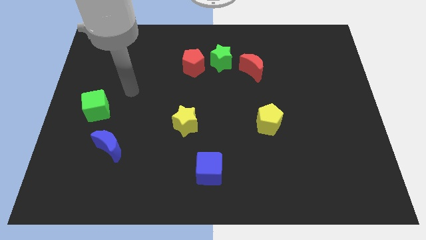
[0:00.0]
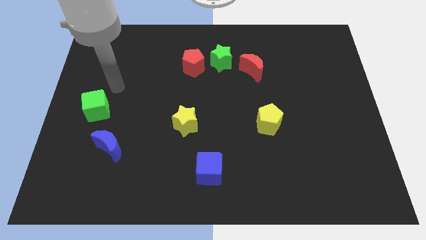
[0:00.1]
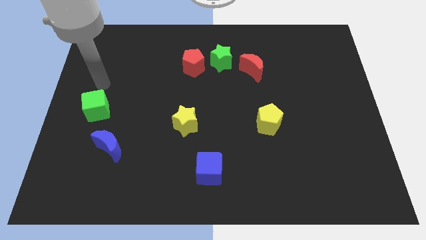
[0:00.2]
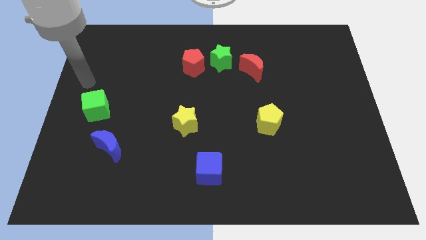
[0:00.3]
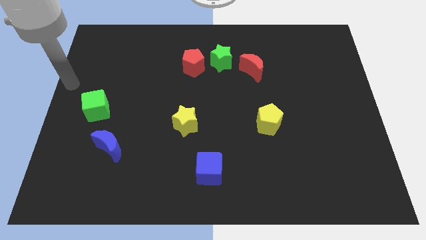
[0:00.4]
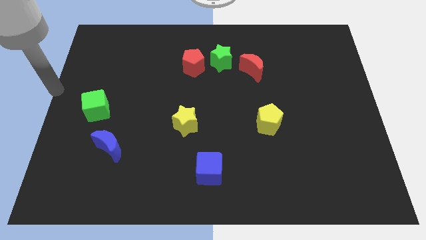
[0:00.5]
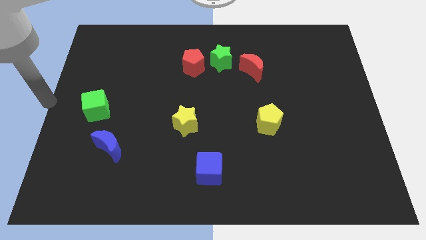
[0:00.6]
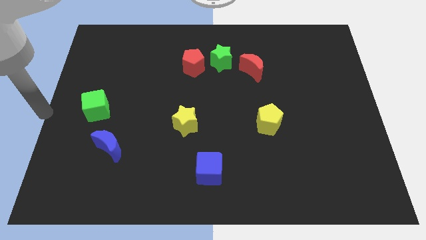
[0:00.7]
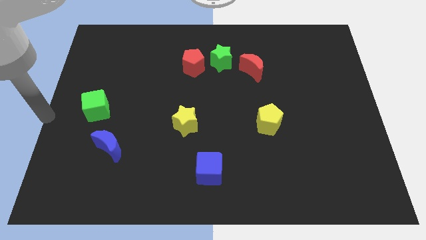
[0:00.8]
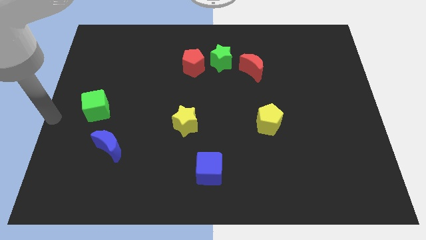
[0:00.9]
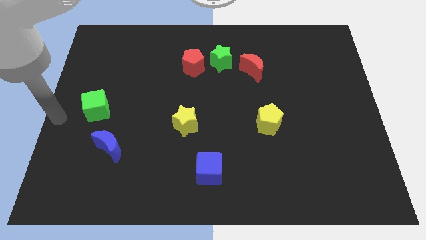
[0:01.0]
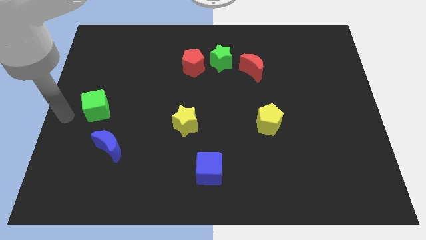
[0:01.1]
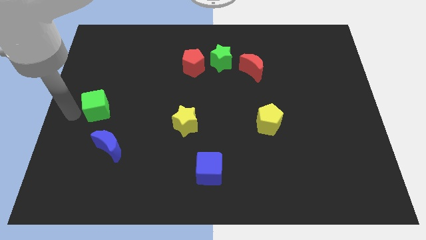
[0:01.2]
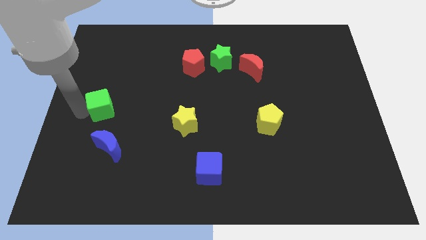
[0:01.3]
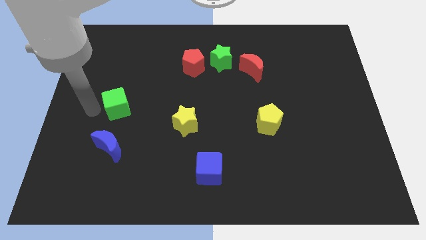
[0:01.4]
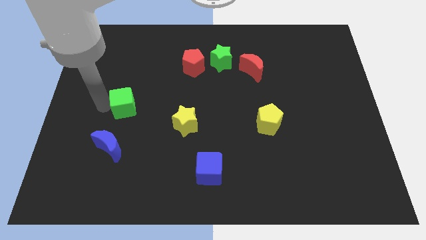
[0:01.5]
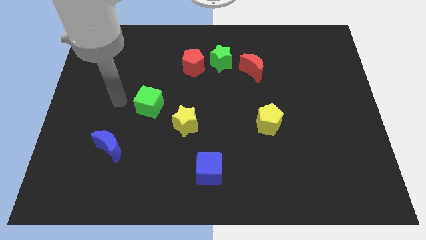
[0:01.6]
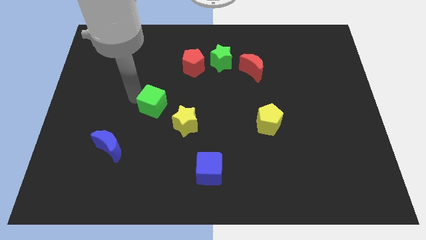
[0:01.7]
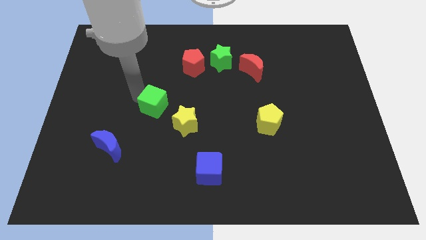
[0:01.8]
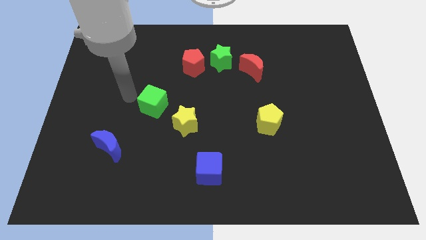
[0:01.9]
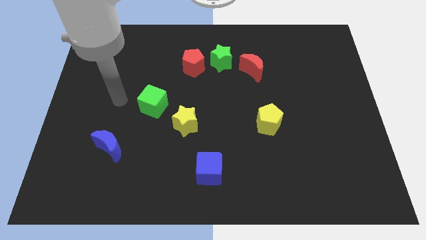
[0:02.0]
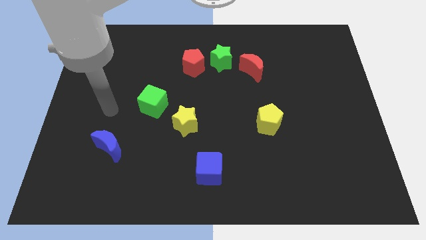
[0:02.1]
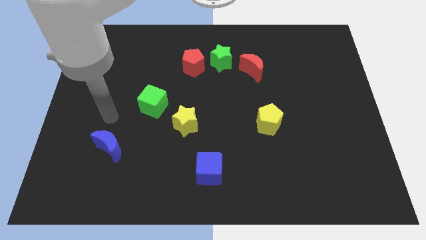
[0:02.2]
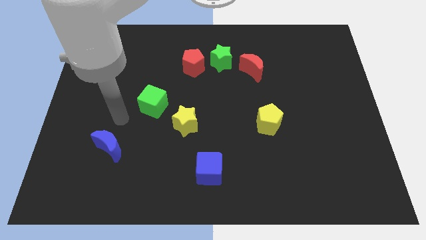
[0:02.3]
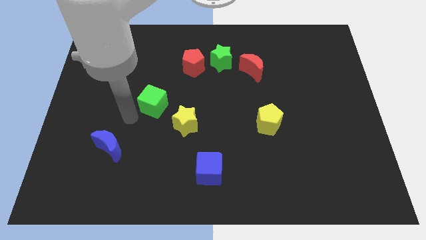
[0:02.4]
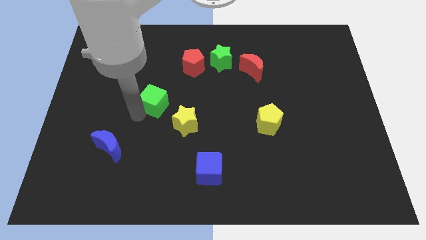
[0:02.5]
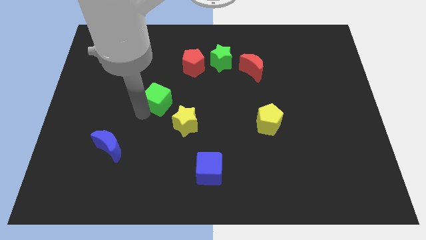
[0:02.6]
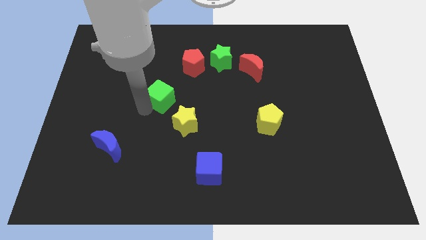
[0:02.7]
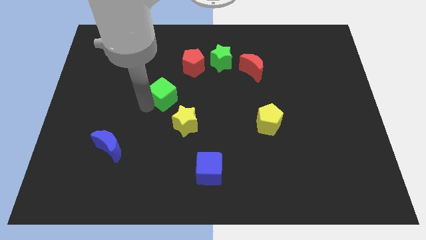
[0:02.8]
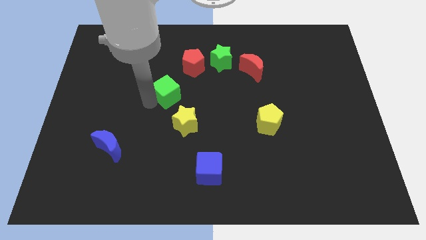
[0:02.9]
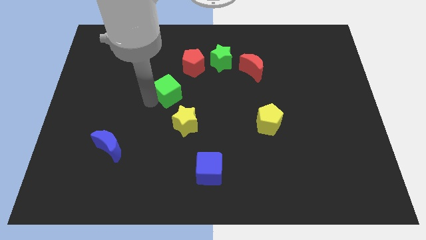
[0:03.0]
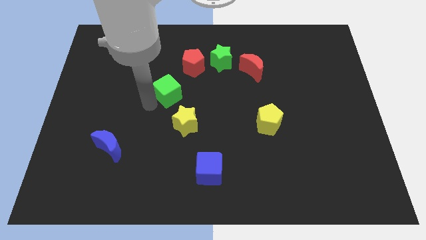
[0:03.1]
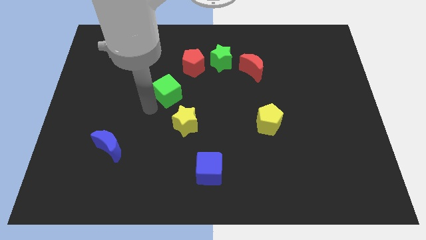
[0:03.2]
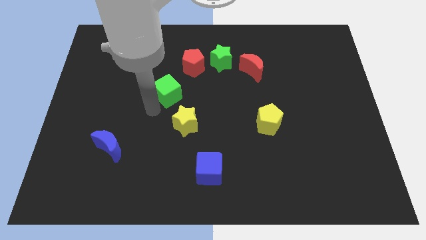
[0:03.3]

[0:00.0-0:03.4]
push green cube to the center

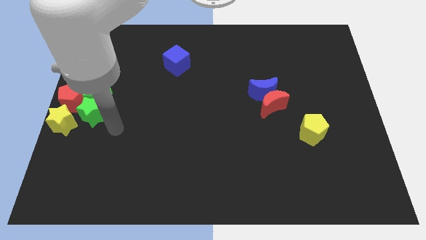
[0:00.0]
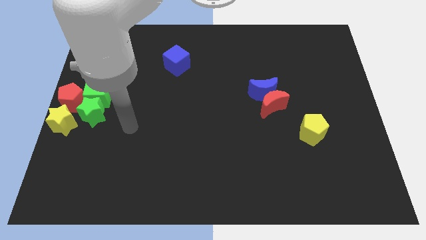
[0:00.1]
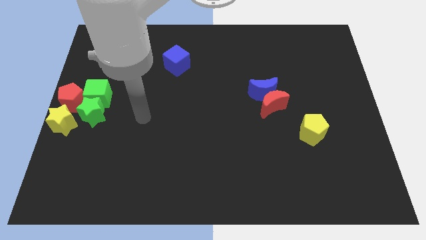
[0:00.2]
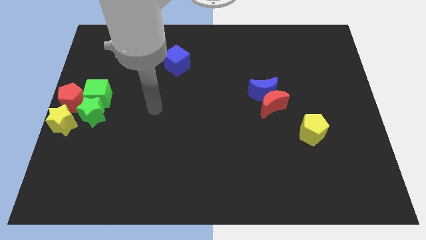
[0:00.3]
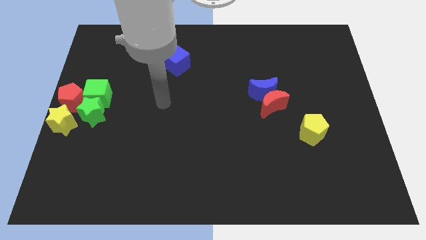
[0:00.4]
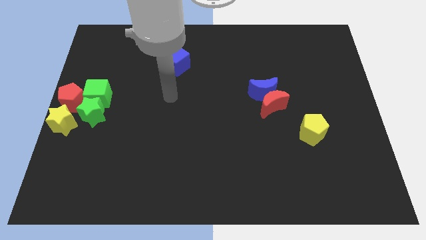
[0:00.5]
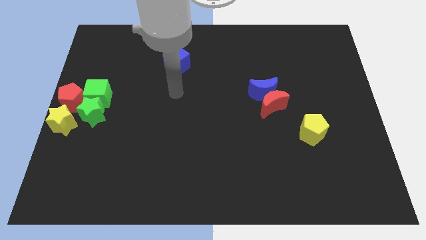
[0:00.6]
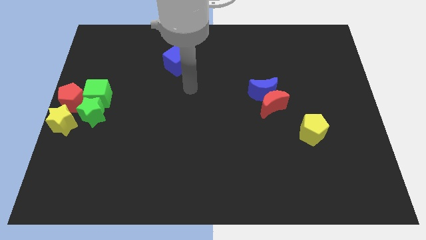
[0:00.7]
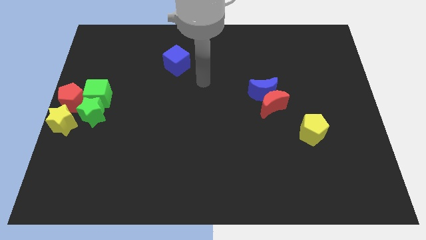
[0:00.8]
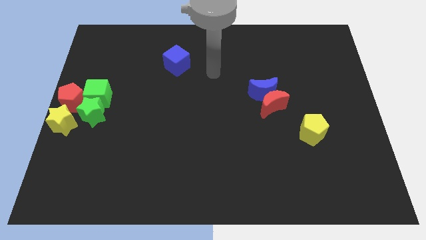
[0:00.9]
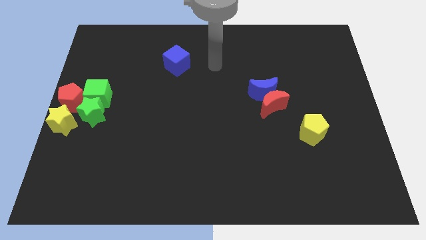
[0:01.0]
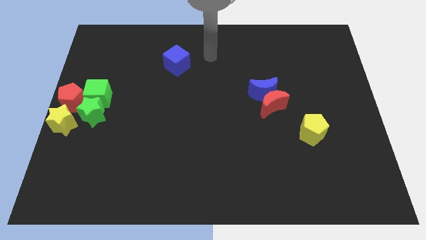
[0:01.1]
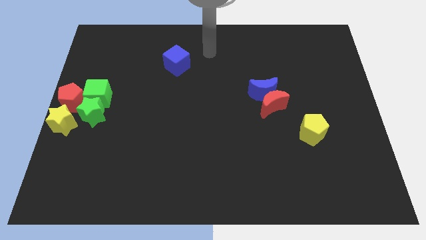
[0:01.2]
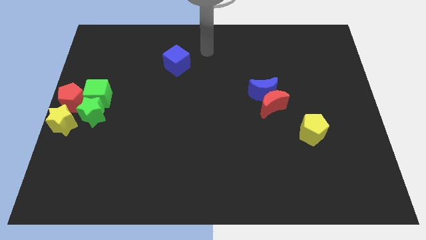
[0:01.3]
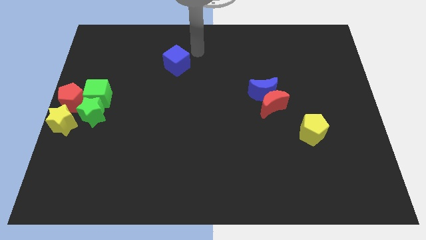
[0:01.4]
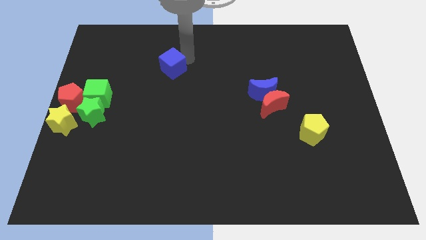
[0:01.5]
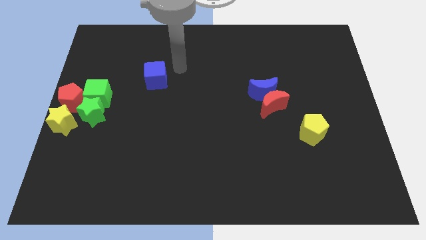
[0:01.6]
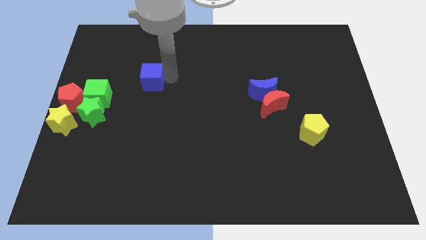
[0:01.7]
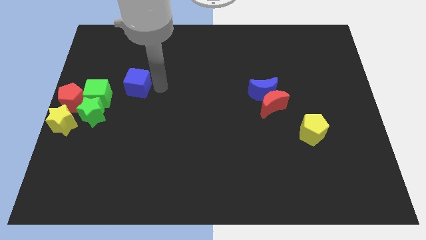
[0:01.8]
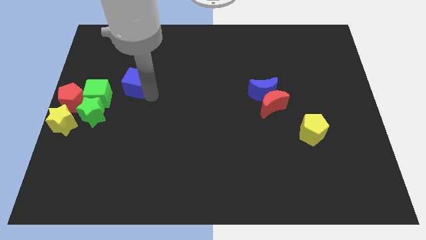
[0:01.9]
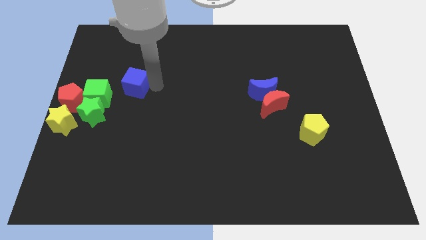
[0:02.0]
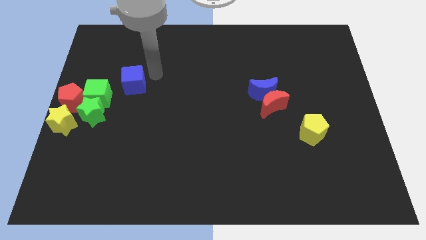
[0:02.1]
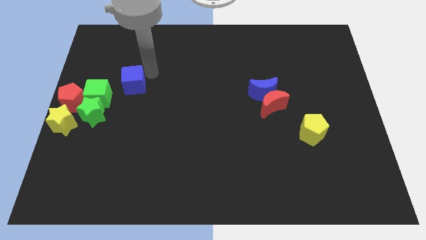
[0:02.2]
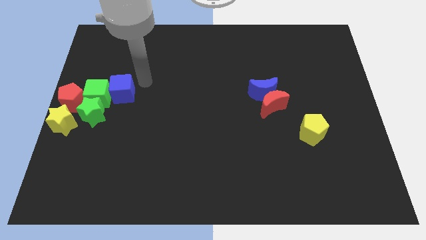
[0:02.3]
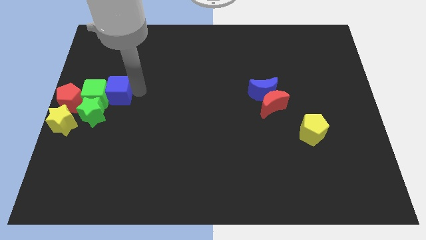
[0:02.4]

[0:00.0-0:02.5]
push the blue cube into the group of blocks

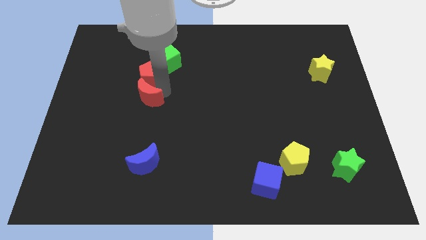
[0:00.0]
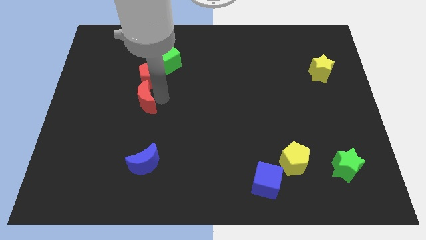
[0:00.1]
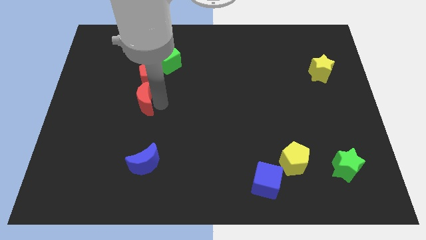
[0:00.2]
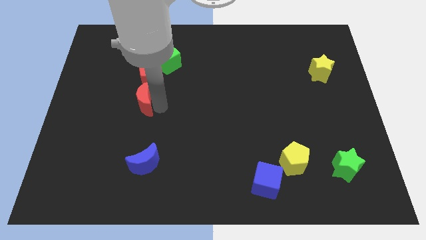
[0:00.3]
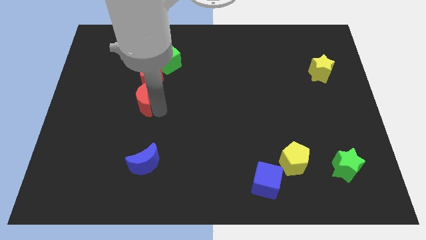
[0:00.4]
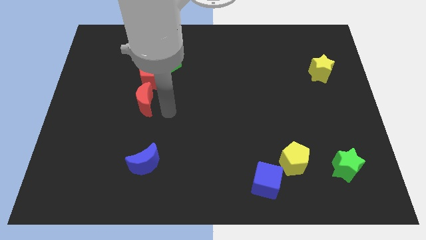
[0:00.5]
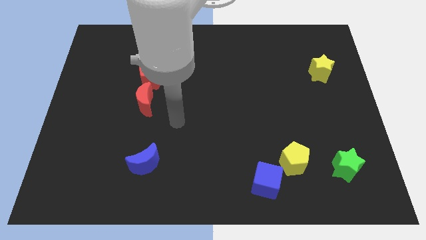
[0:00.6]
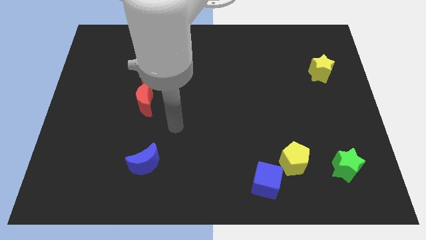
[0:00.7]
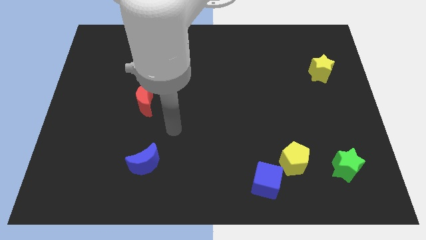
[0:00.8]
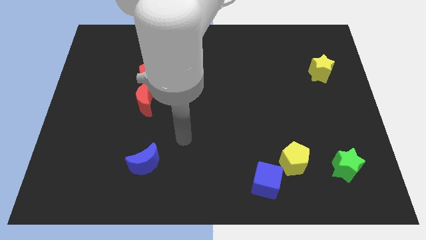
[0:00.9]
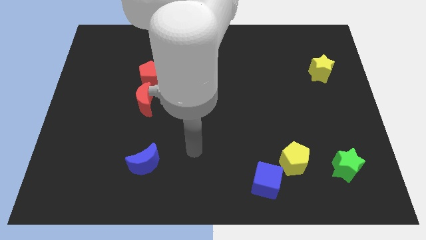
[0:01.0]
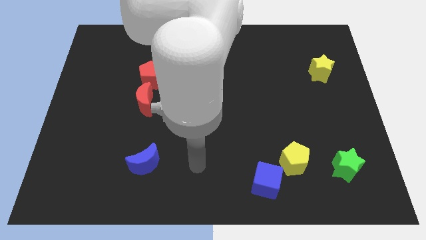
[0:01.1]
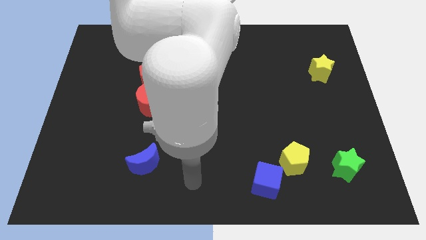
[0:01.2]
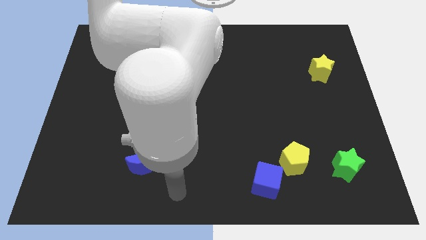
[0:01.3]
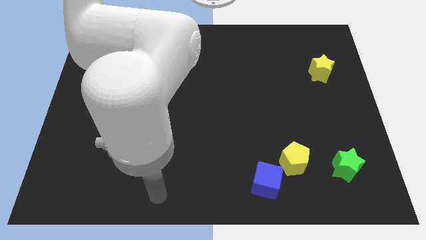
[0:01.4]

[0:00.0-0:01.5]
move the arm away from the red pentagon

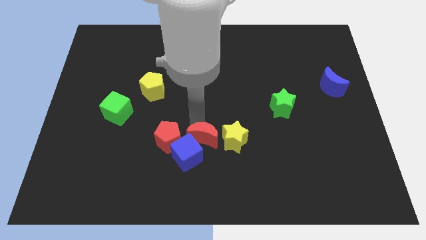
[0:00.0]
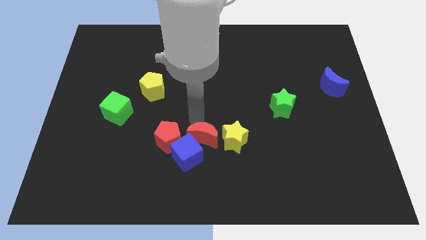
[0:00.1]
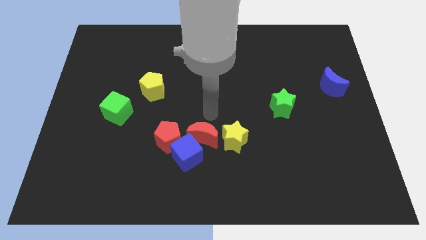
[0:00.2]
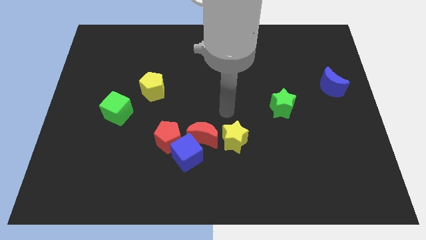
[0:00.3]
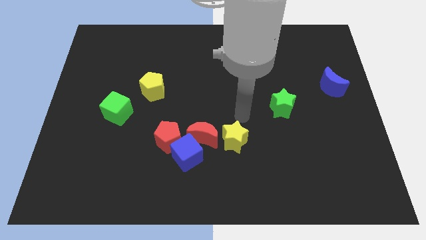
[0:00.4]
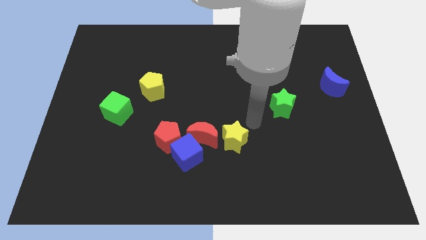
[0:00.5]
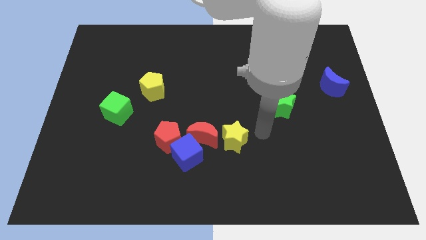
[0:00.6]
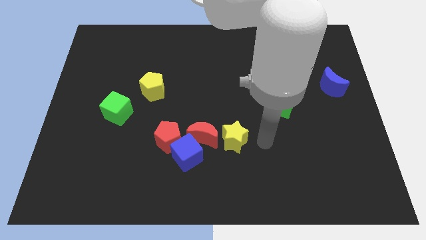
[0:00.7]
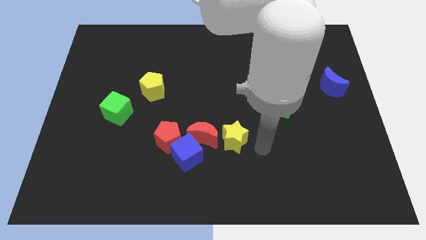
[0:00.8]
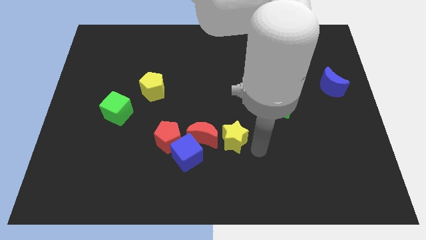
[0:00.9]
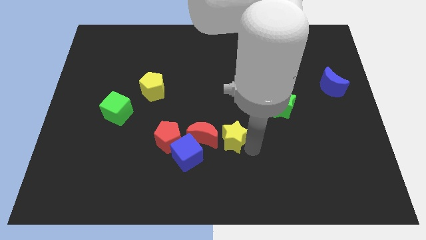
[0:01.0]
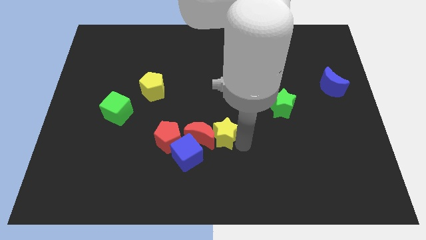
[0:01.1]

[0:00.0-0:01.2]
move your arm to the right of the yellow star

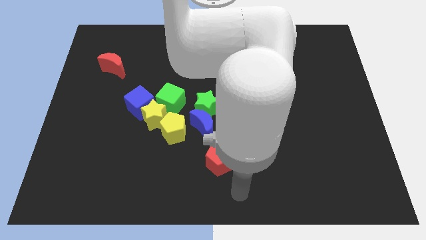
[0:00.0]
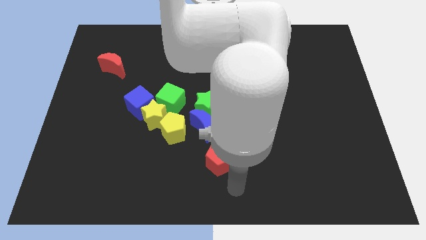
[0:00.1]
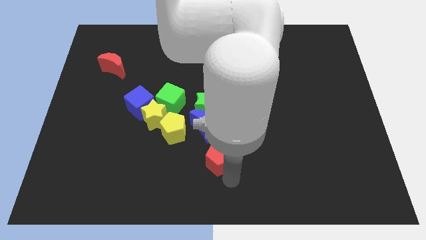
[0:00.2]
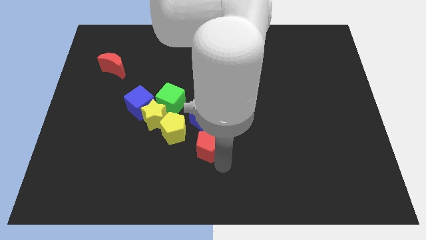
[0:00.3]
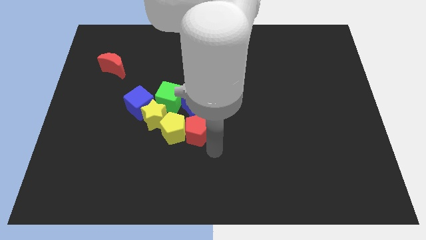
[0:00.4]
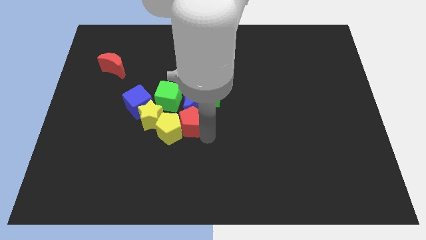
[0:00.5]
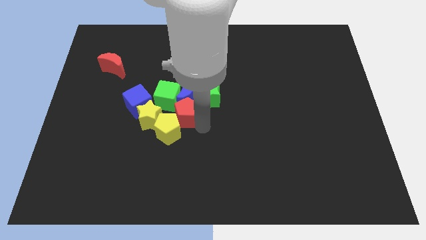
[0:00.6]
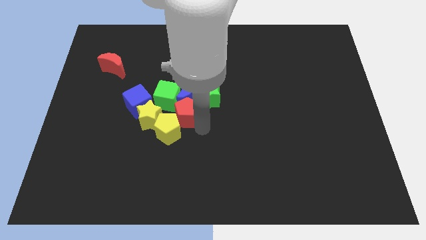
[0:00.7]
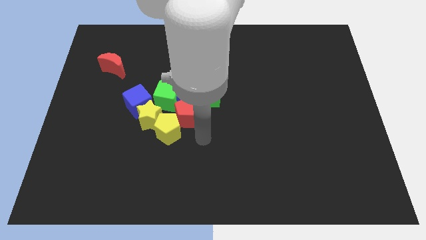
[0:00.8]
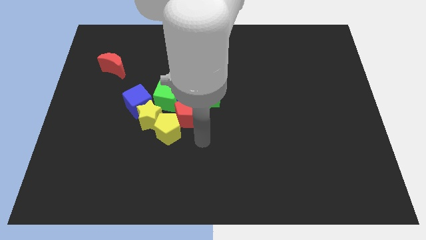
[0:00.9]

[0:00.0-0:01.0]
push the red pentagon into the blue moon
